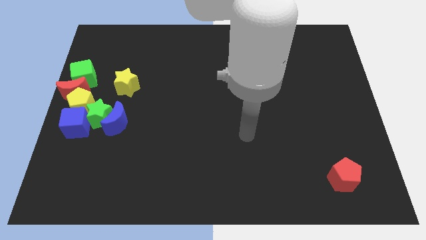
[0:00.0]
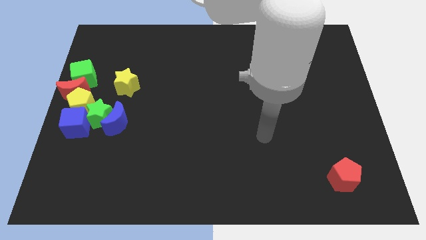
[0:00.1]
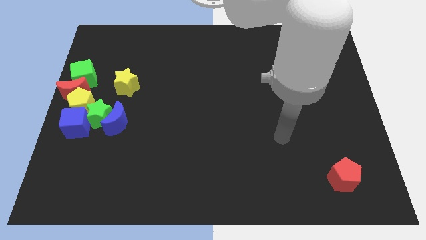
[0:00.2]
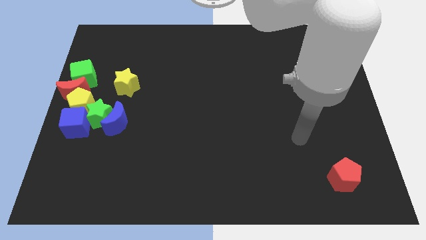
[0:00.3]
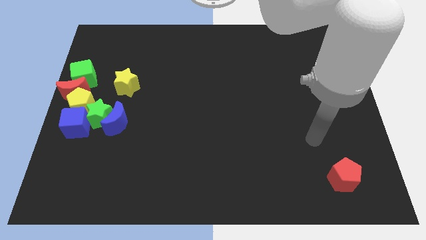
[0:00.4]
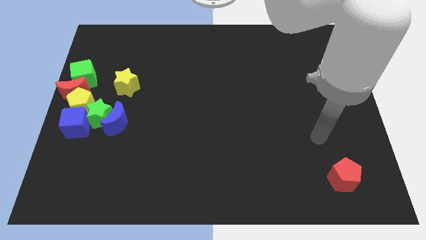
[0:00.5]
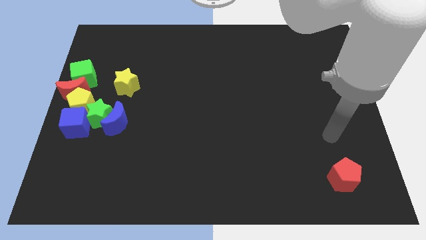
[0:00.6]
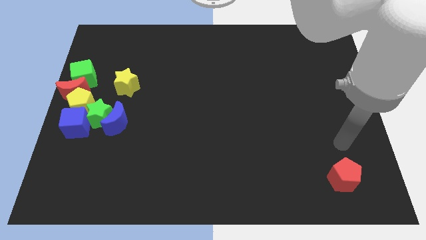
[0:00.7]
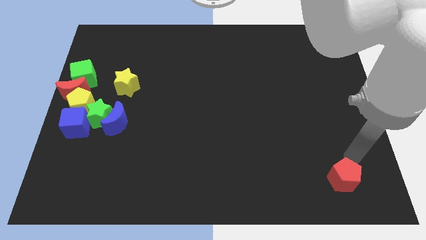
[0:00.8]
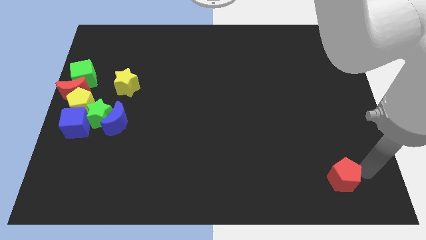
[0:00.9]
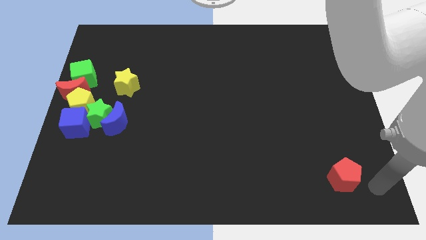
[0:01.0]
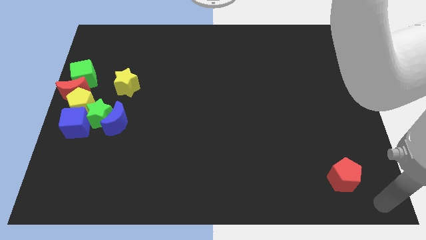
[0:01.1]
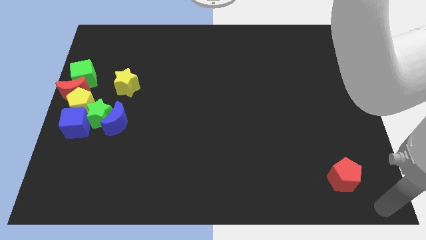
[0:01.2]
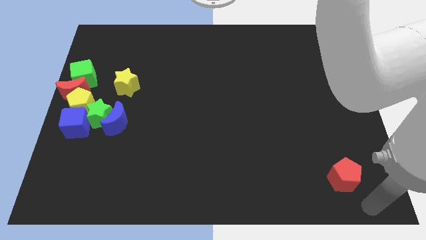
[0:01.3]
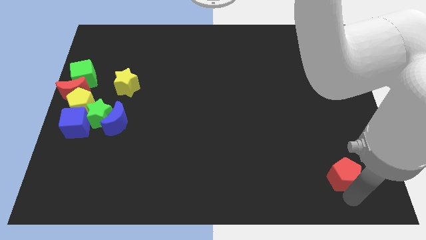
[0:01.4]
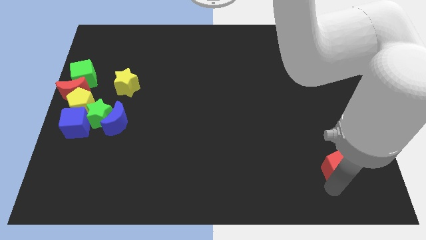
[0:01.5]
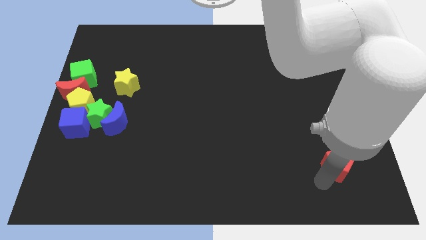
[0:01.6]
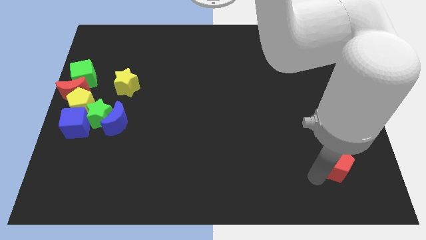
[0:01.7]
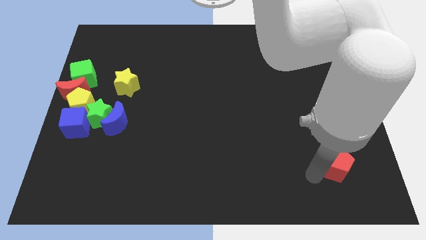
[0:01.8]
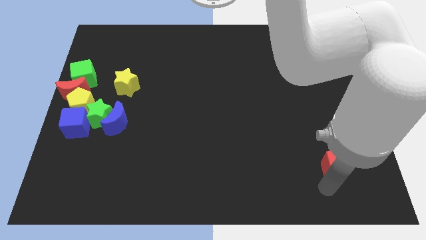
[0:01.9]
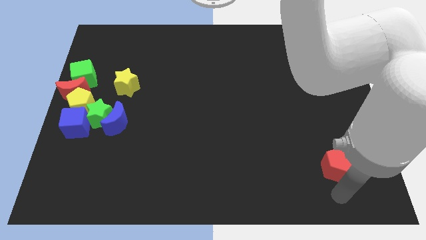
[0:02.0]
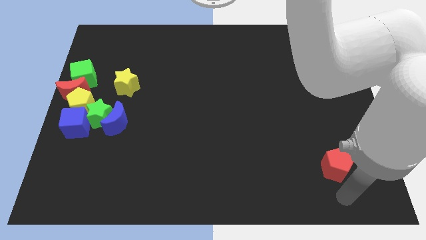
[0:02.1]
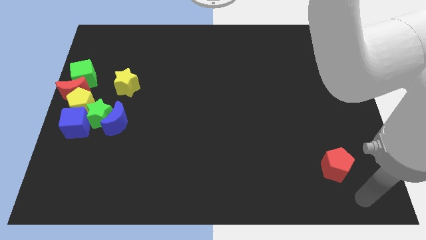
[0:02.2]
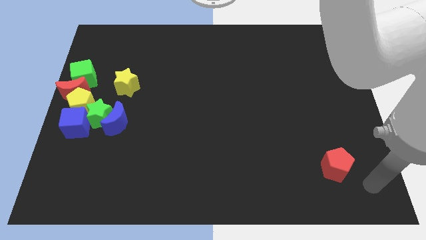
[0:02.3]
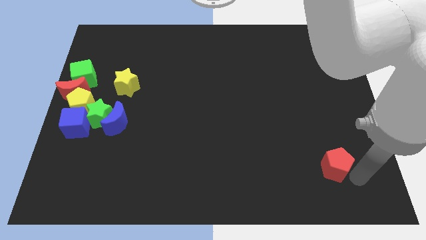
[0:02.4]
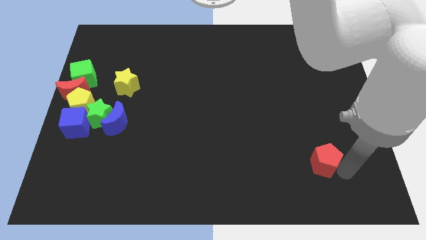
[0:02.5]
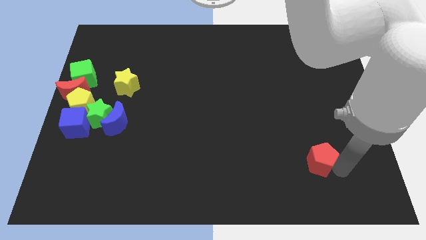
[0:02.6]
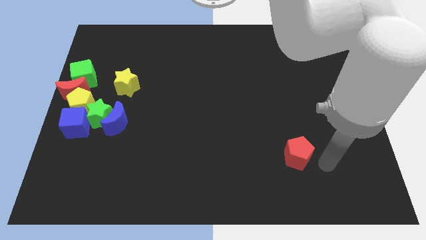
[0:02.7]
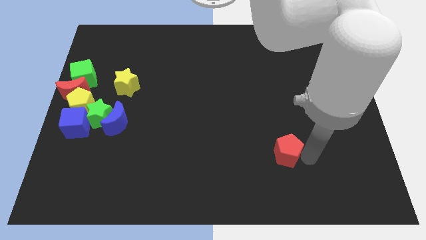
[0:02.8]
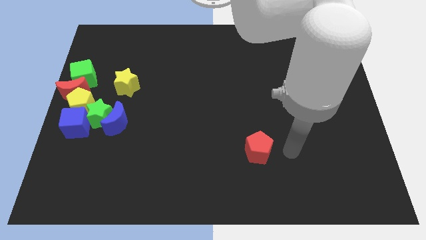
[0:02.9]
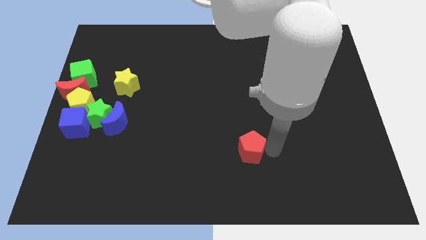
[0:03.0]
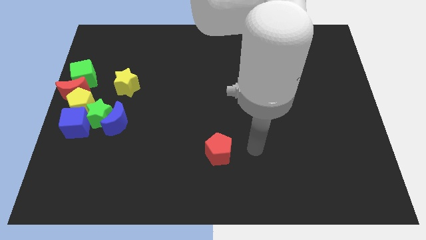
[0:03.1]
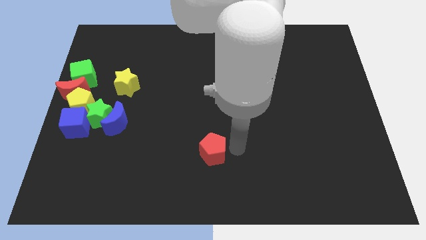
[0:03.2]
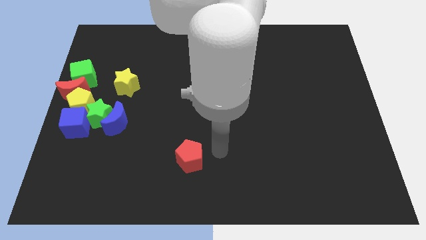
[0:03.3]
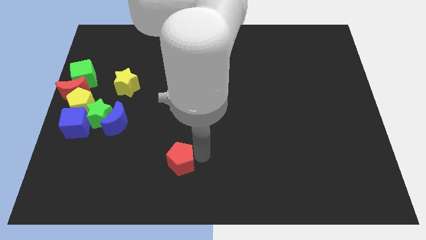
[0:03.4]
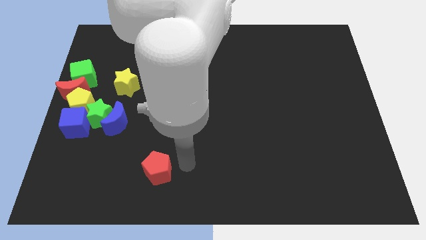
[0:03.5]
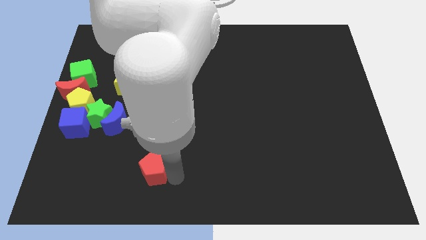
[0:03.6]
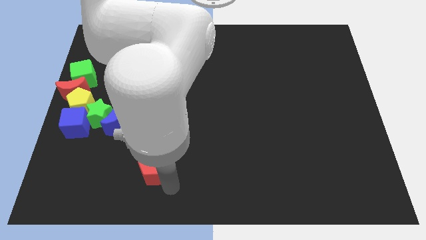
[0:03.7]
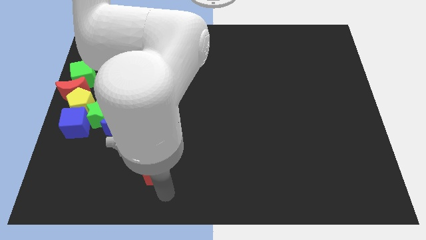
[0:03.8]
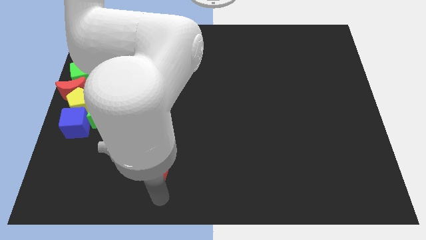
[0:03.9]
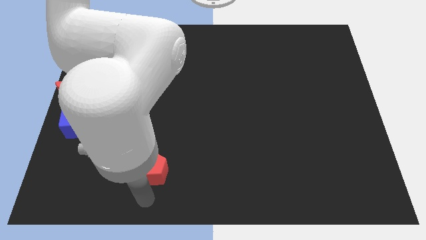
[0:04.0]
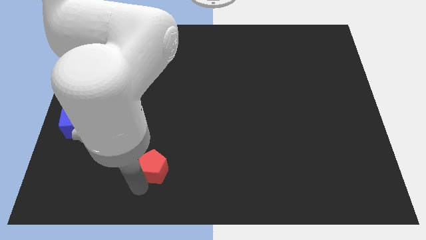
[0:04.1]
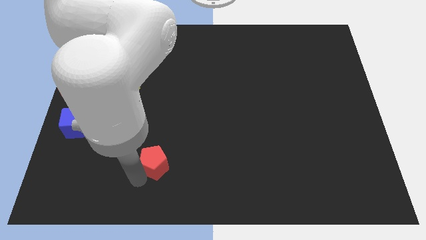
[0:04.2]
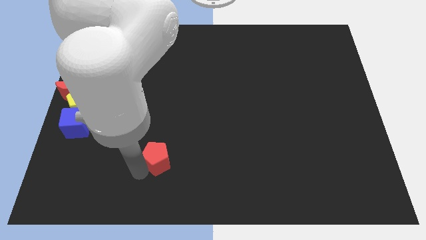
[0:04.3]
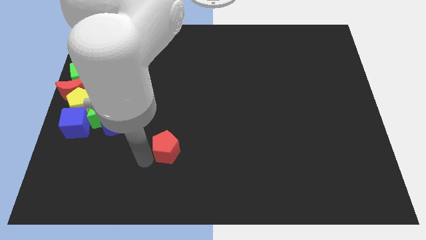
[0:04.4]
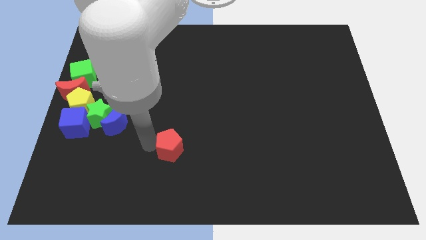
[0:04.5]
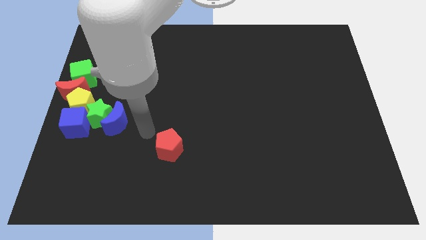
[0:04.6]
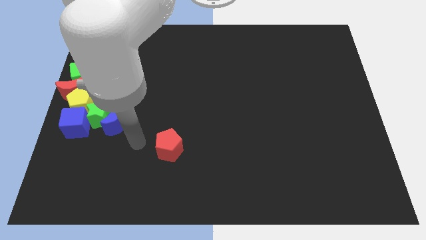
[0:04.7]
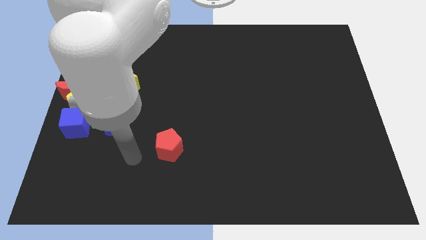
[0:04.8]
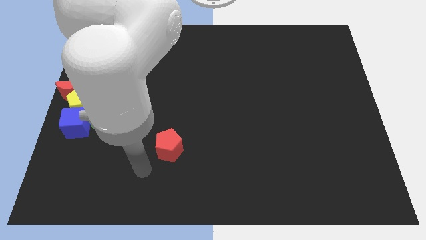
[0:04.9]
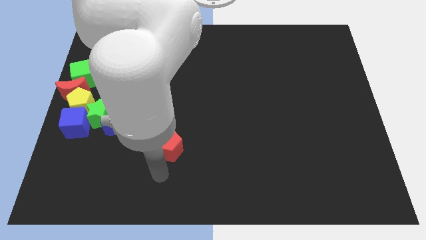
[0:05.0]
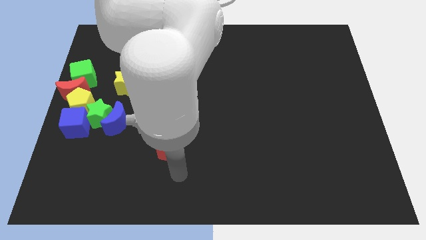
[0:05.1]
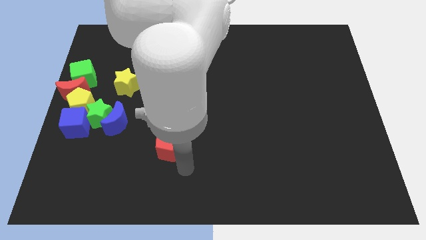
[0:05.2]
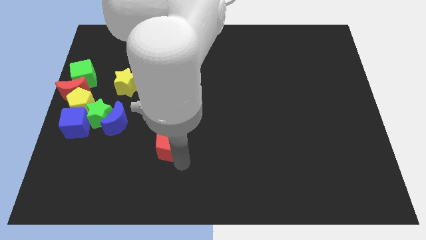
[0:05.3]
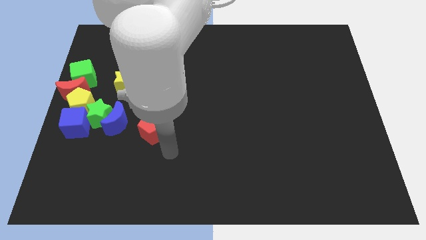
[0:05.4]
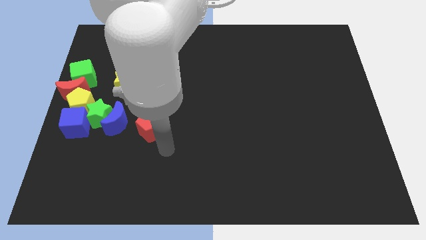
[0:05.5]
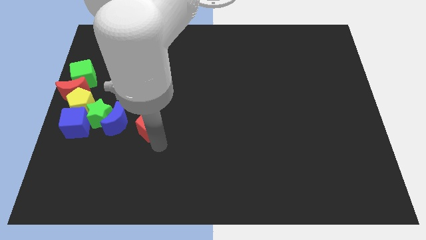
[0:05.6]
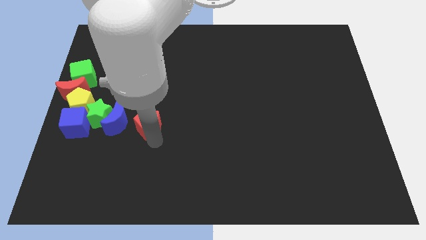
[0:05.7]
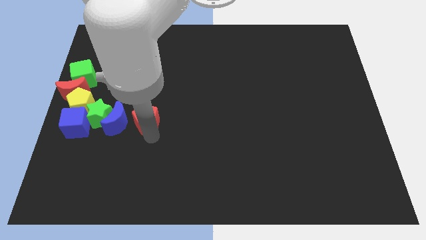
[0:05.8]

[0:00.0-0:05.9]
place red pentagon to the right of blue moon

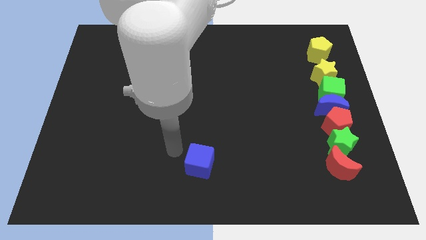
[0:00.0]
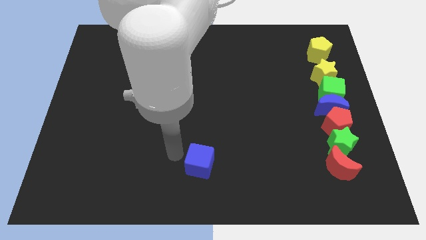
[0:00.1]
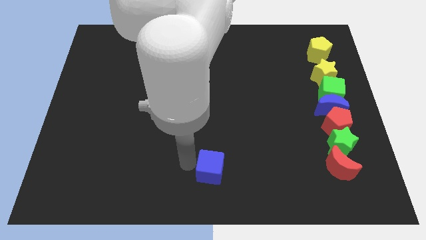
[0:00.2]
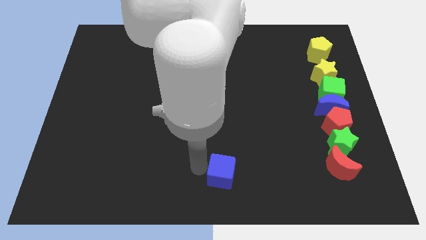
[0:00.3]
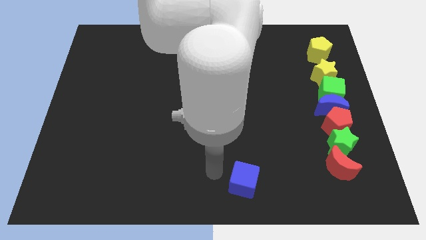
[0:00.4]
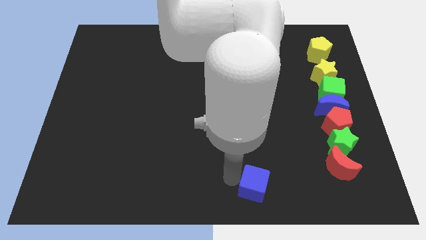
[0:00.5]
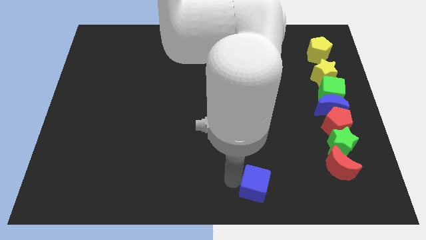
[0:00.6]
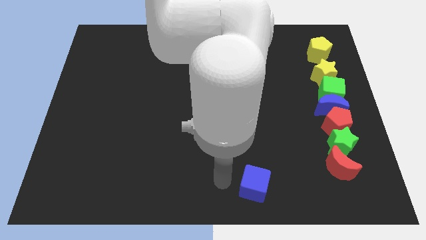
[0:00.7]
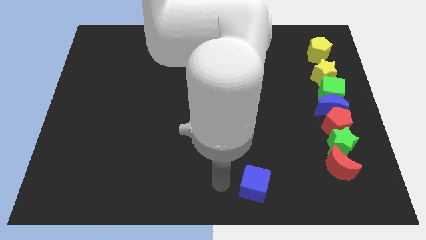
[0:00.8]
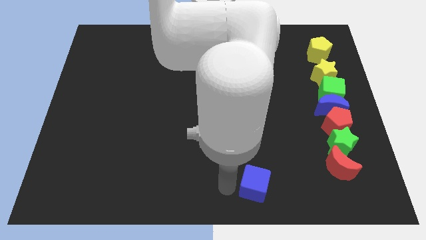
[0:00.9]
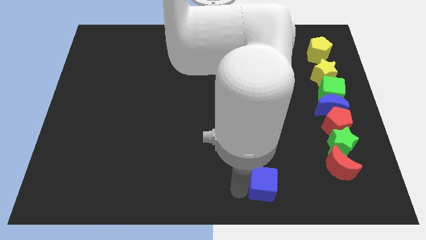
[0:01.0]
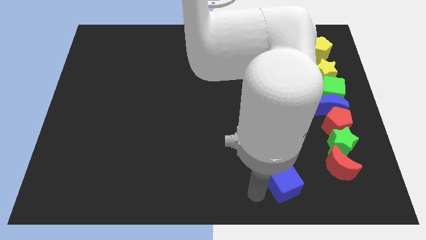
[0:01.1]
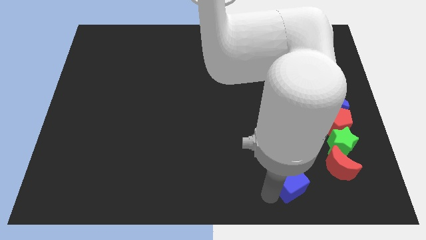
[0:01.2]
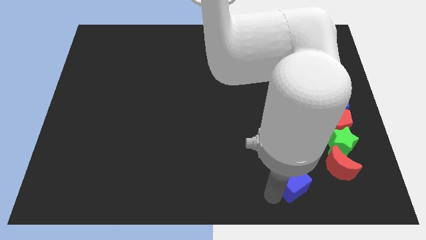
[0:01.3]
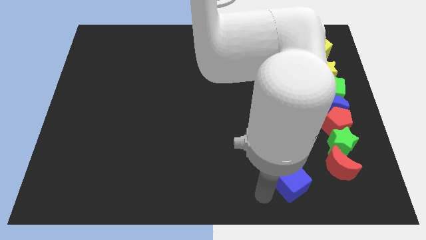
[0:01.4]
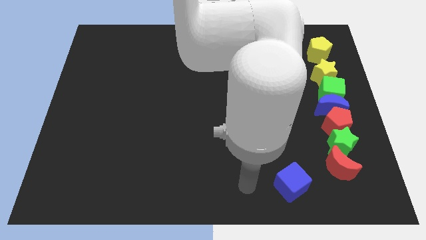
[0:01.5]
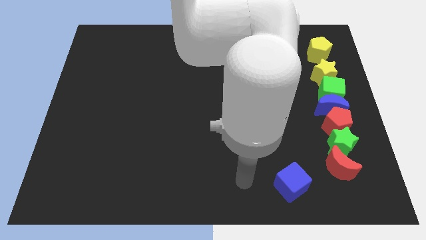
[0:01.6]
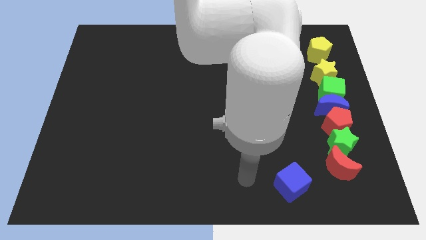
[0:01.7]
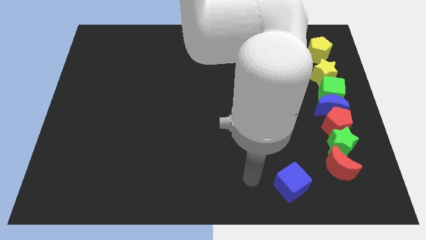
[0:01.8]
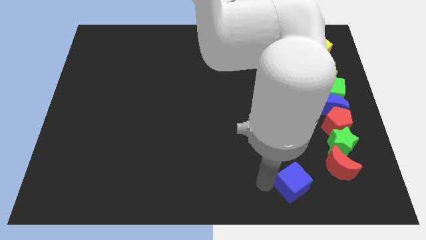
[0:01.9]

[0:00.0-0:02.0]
push the blue cube to the right side of the board

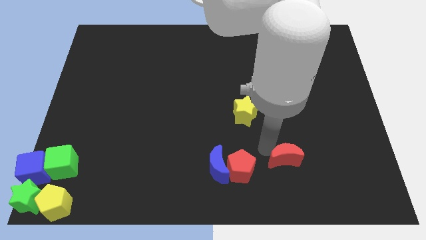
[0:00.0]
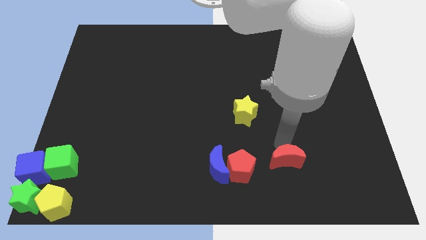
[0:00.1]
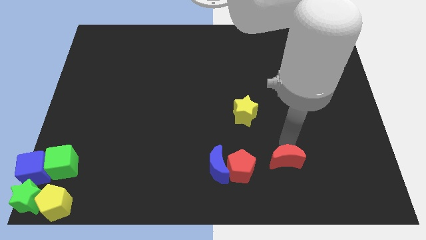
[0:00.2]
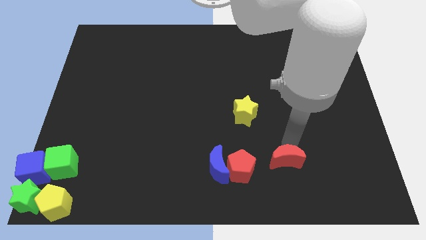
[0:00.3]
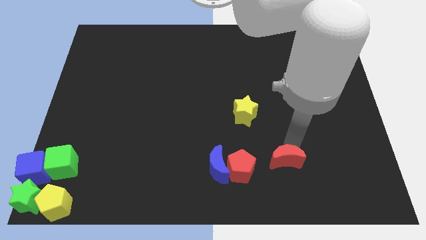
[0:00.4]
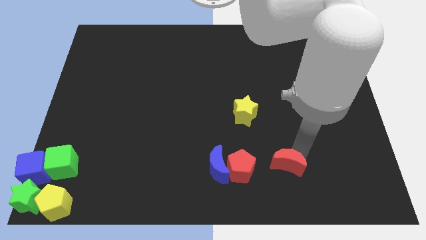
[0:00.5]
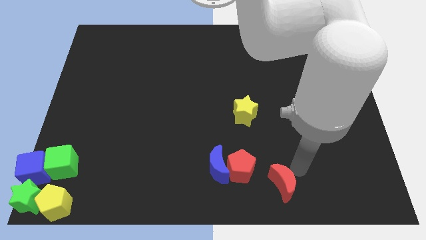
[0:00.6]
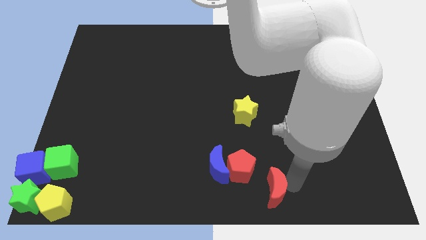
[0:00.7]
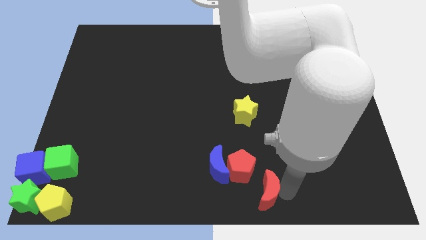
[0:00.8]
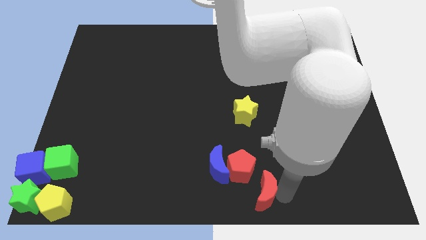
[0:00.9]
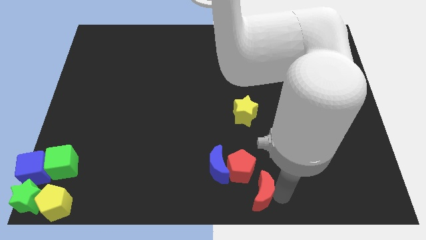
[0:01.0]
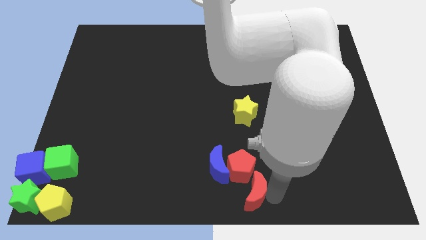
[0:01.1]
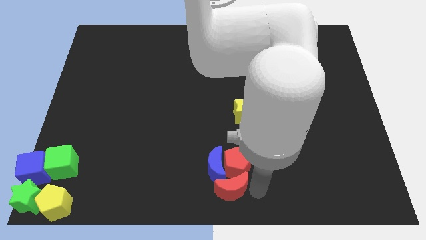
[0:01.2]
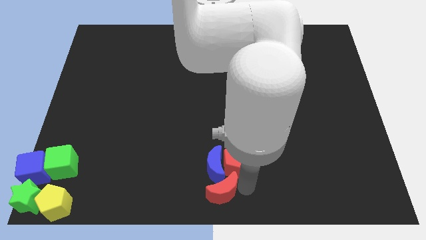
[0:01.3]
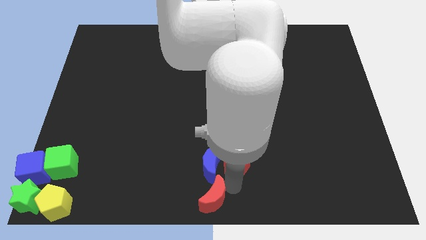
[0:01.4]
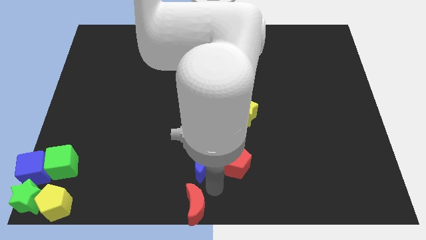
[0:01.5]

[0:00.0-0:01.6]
push the red crescent towards the bottom center of the board
